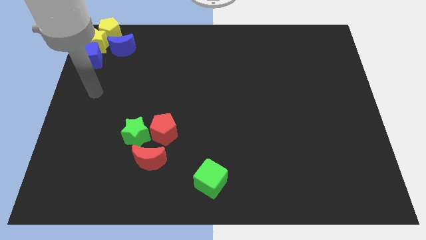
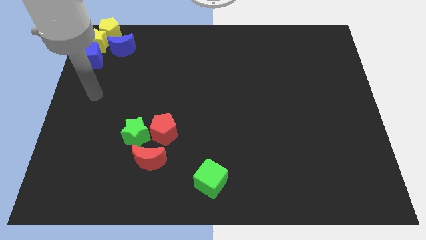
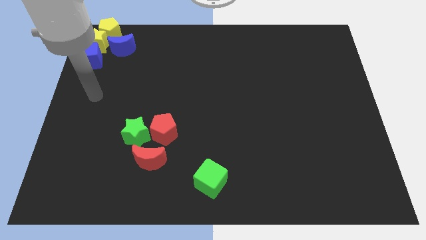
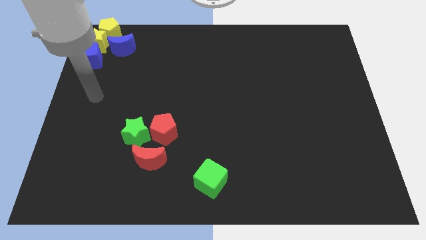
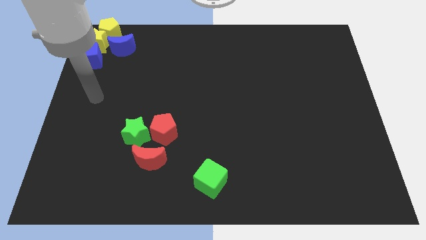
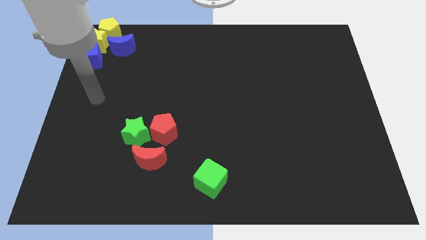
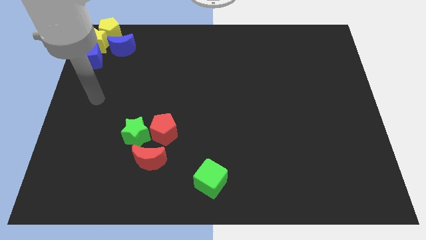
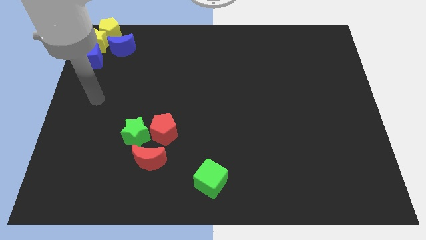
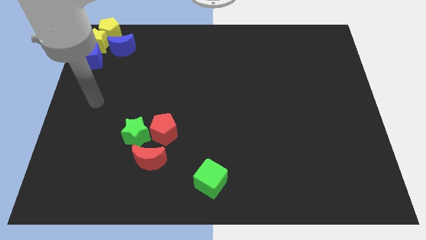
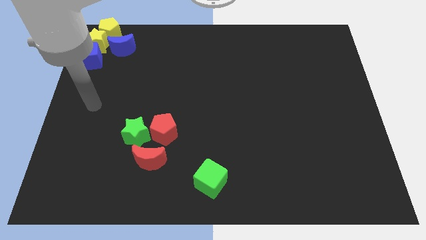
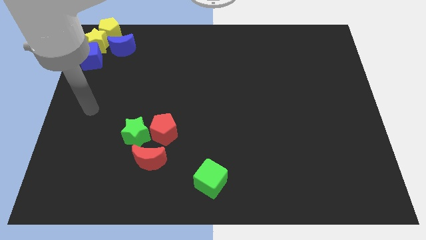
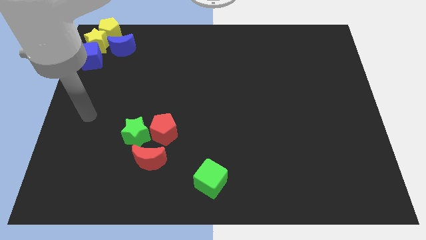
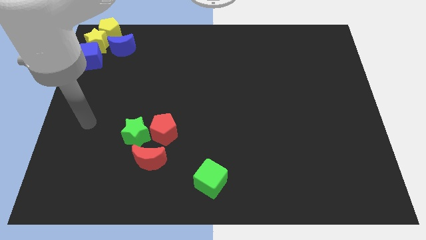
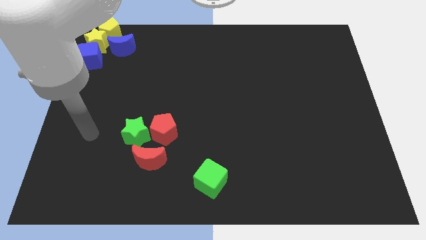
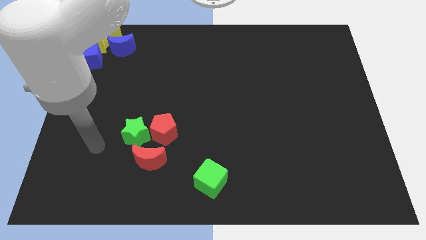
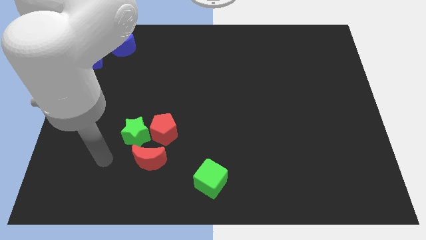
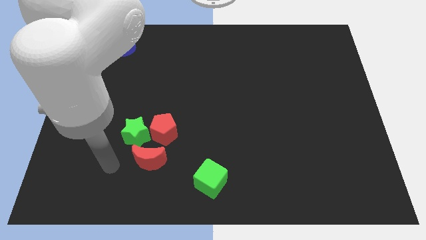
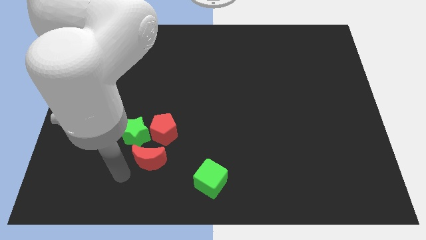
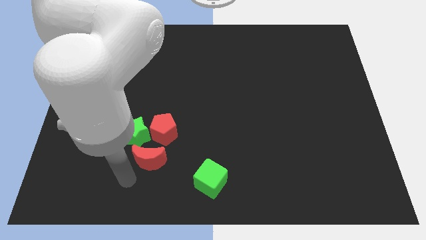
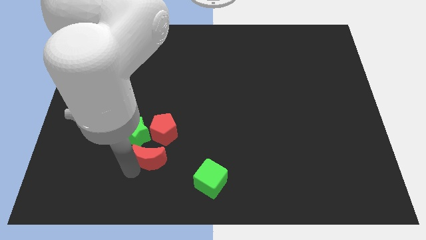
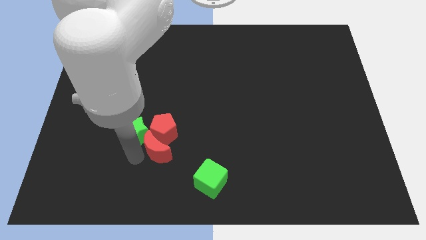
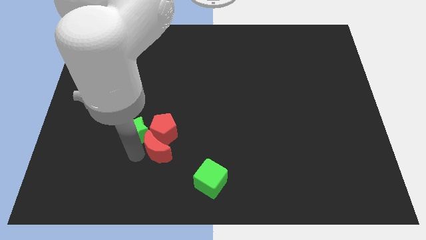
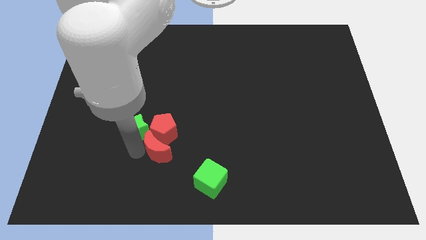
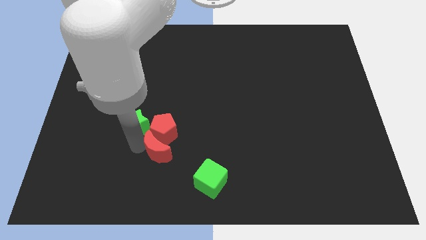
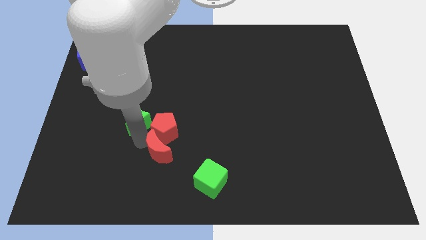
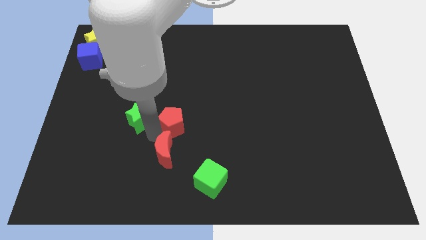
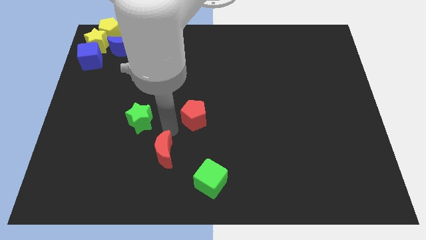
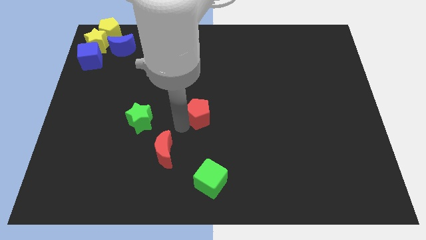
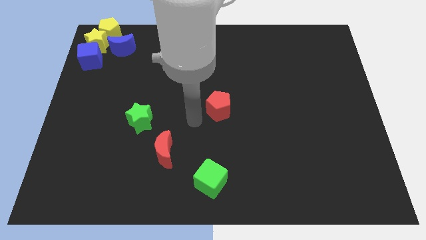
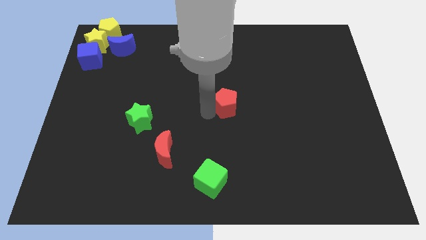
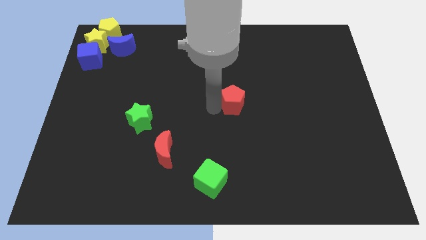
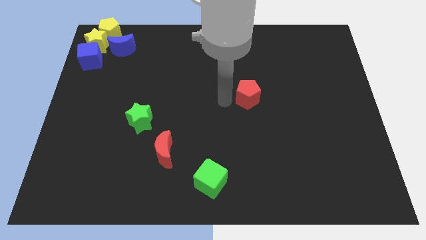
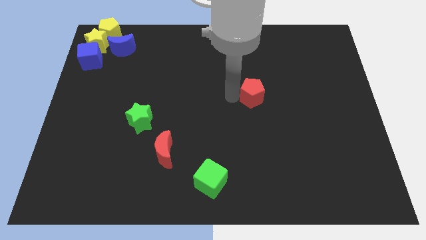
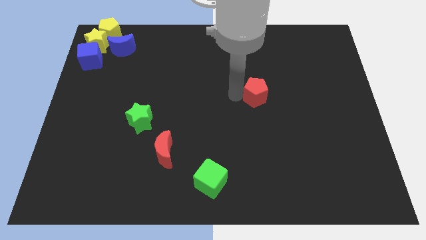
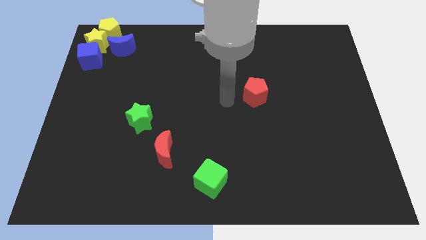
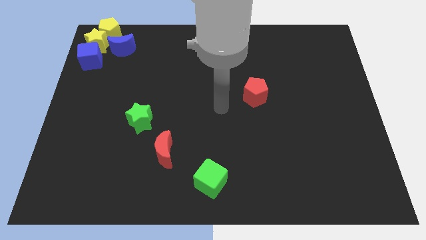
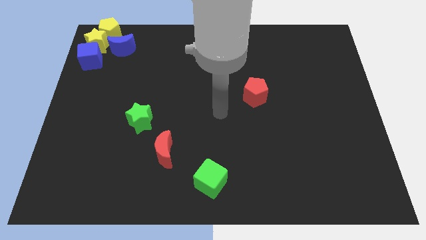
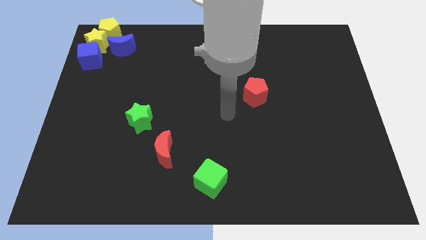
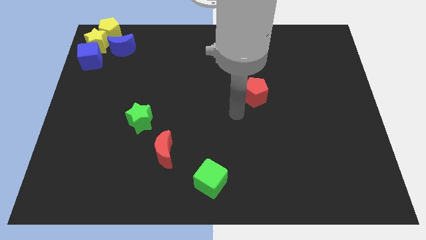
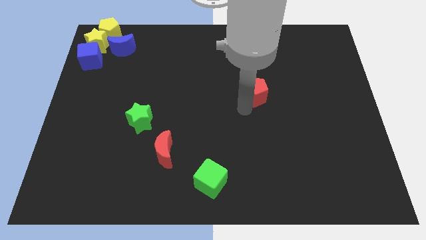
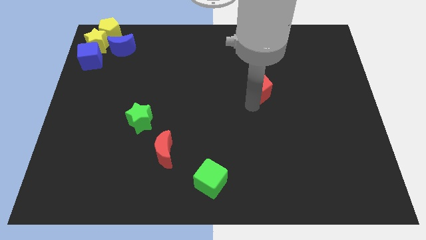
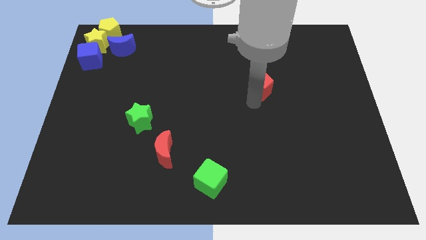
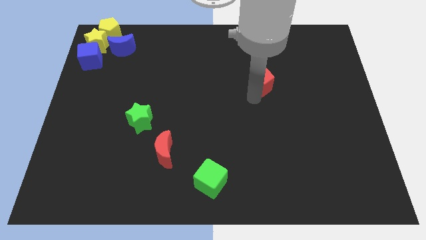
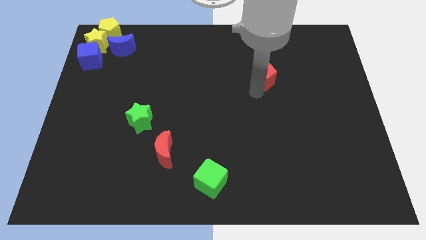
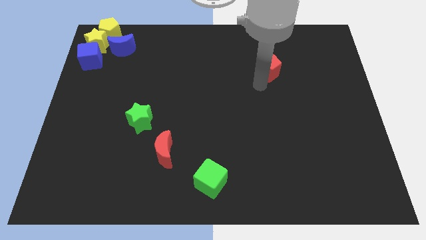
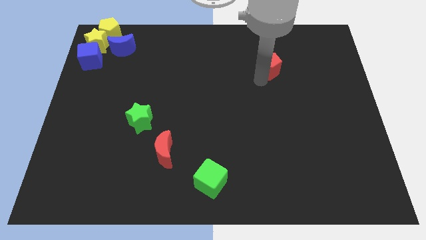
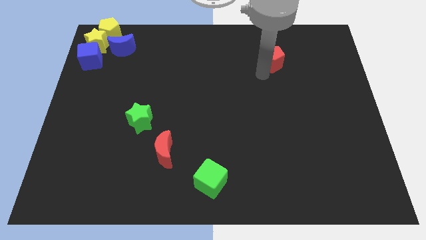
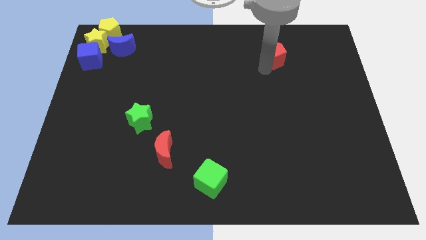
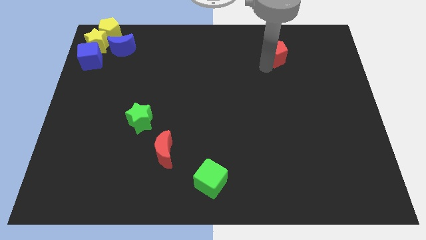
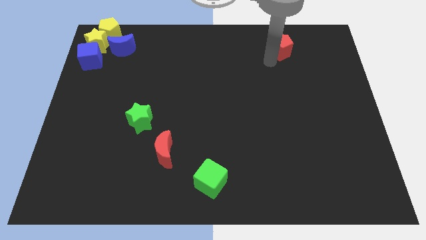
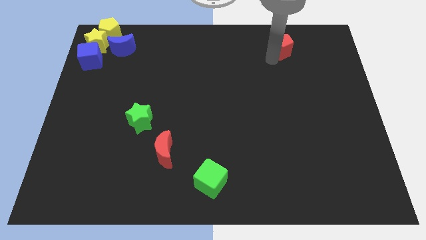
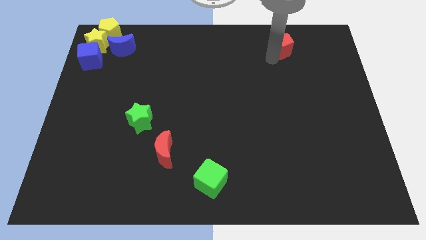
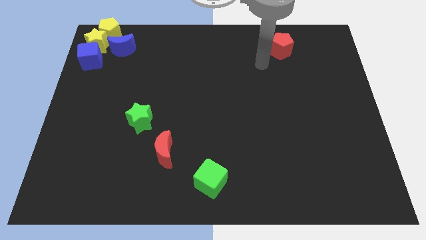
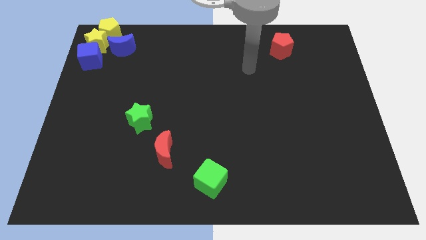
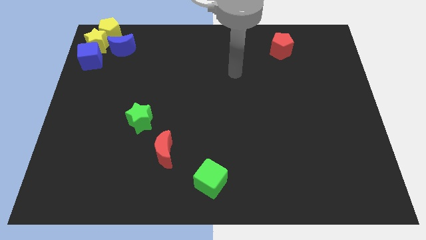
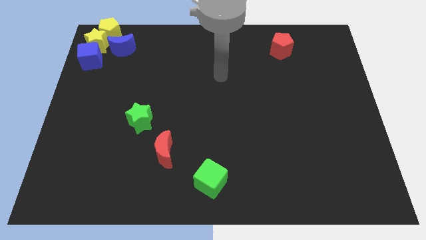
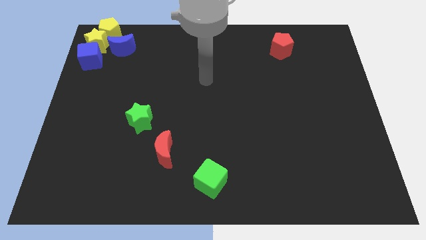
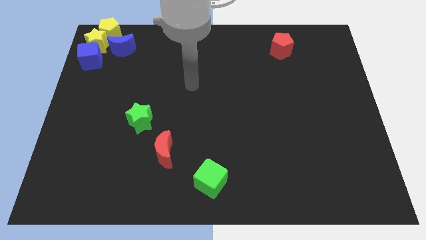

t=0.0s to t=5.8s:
move the red pentagon towards the top right

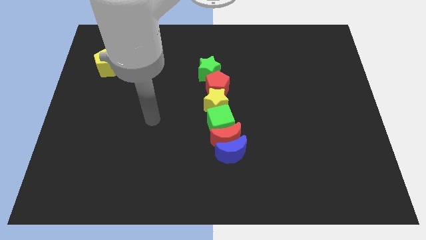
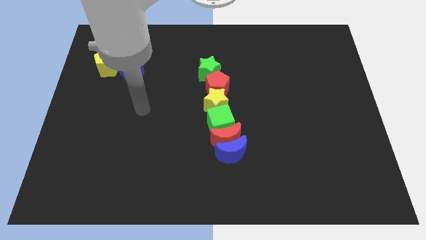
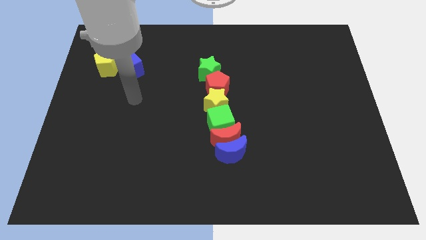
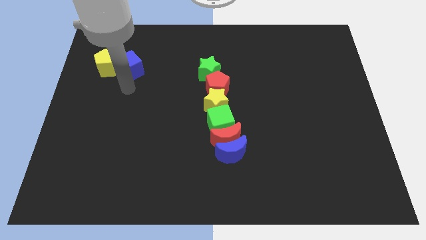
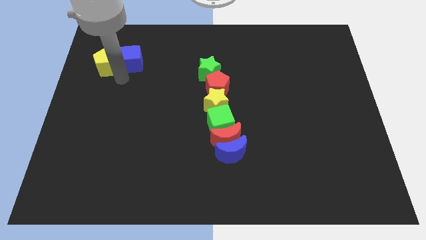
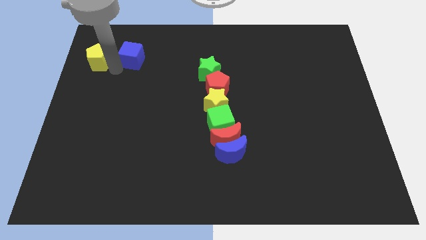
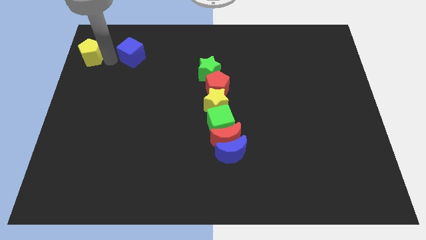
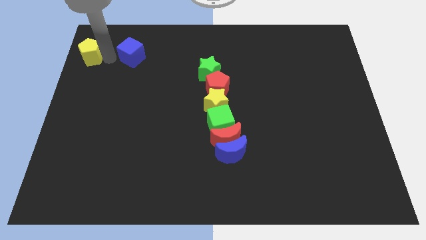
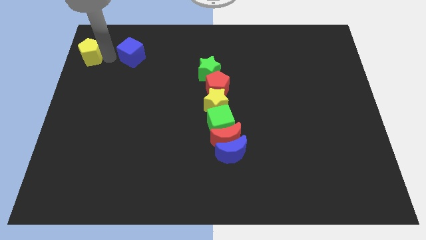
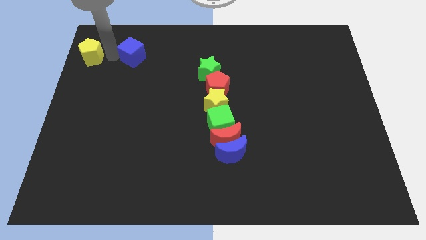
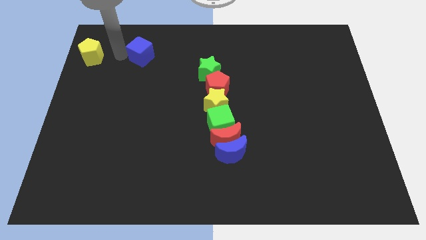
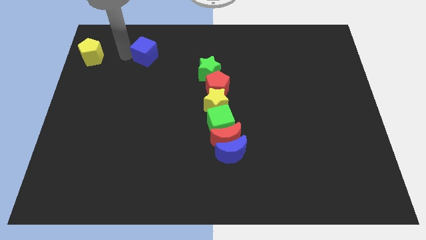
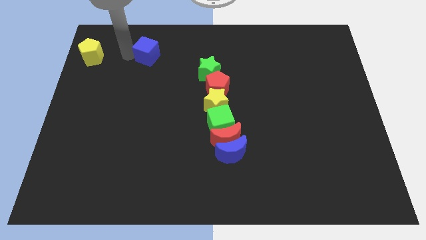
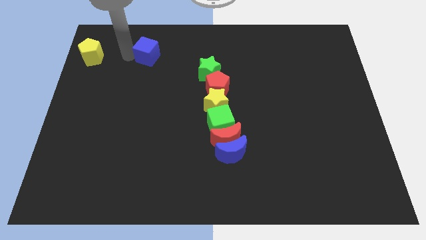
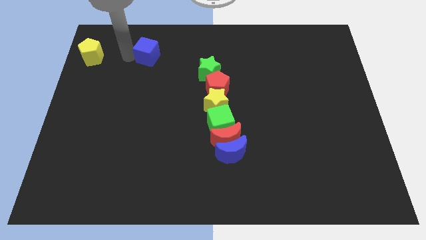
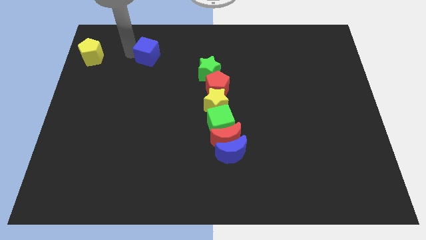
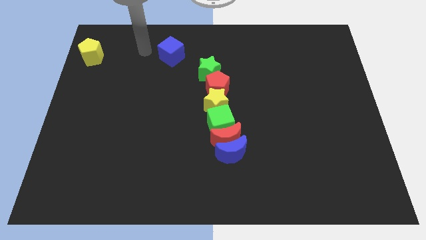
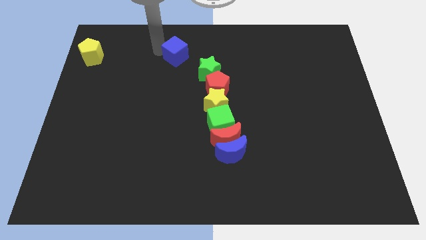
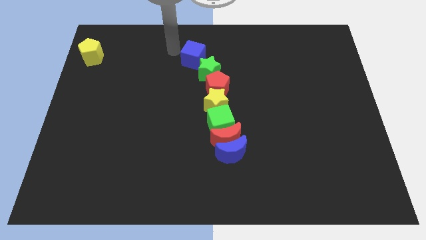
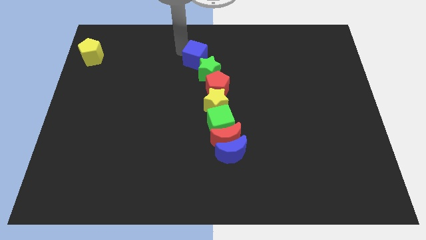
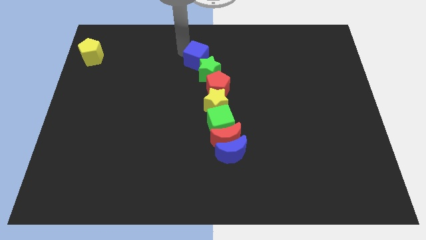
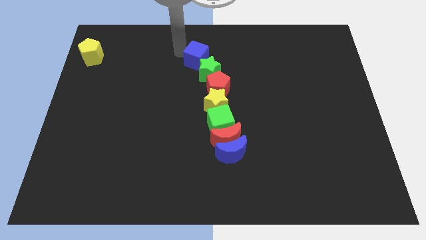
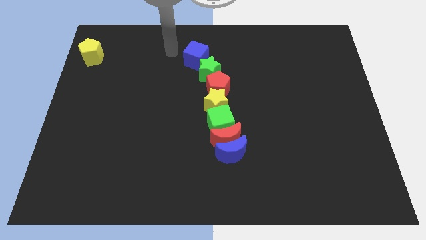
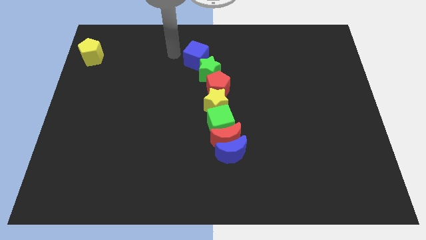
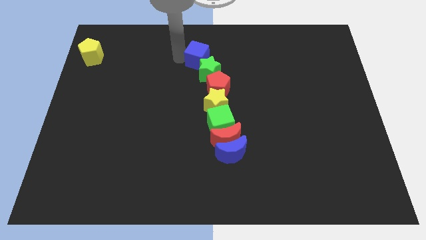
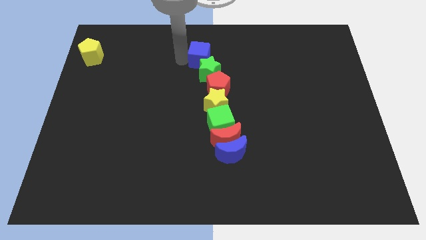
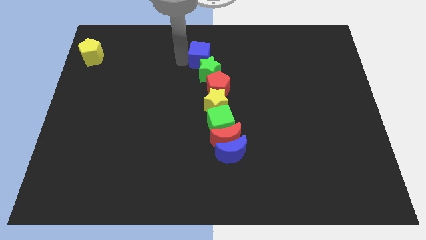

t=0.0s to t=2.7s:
separate the blue cube towards the top of green star vertically

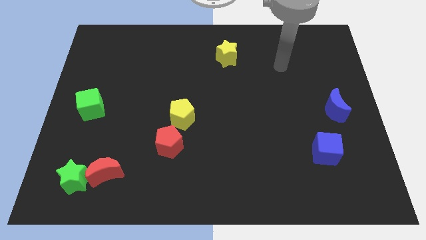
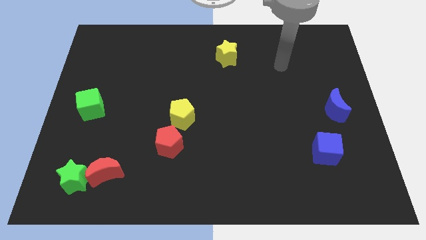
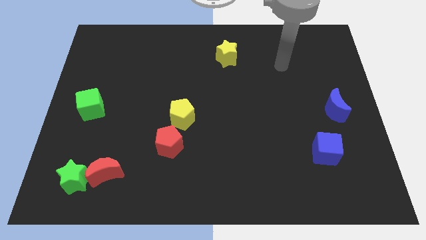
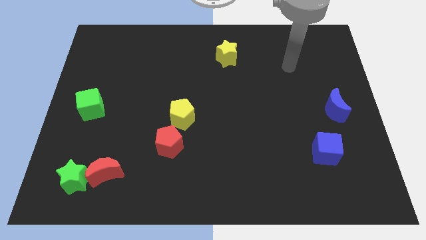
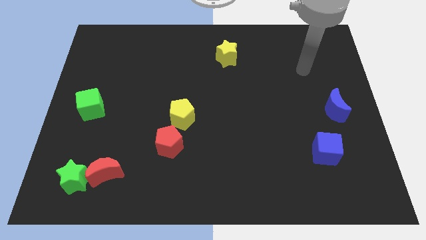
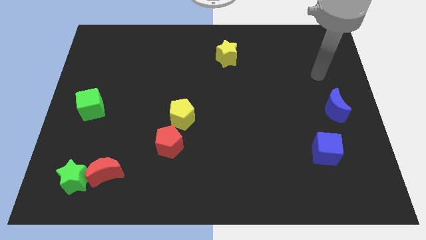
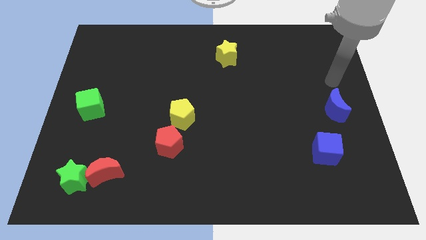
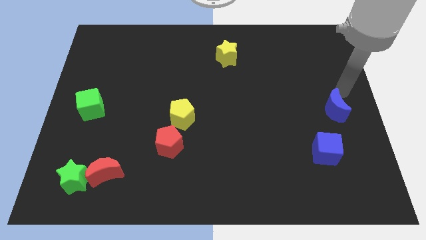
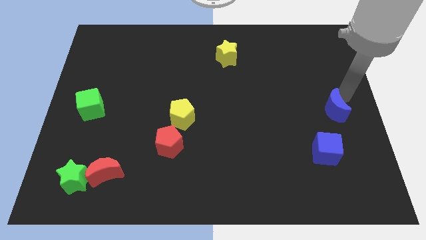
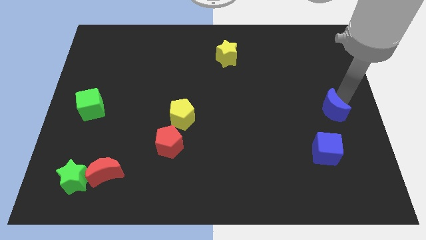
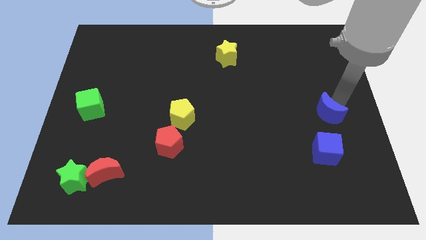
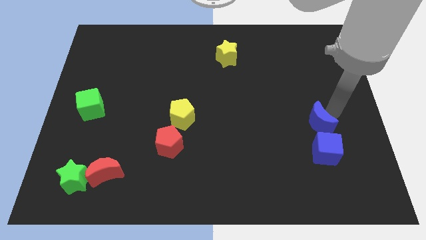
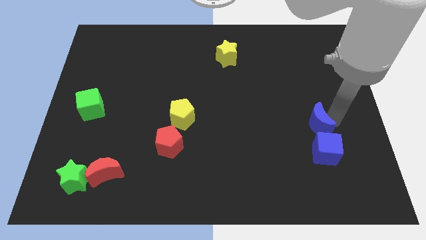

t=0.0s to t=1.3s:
move the blue crescent to the top of the blue cube
